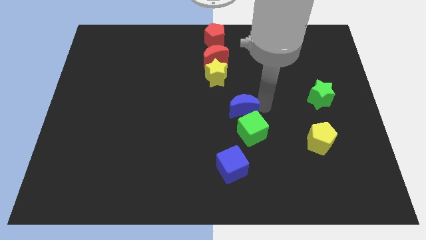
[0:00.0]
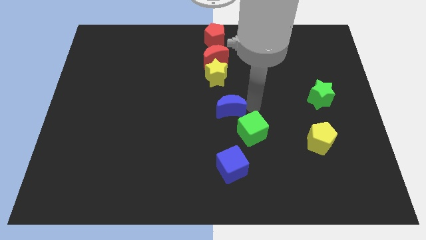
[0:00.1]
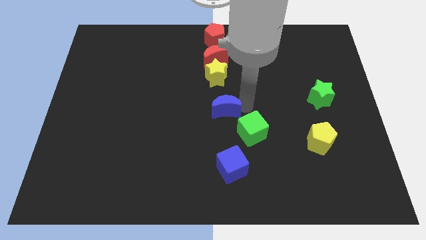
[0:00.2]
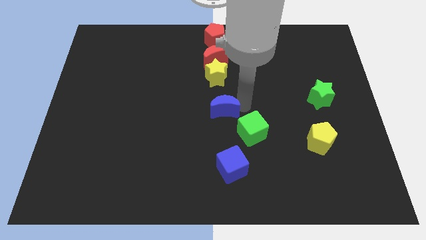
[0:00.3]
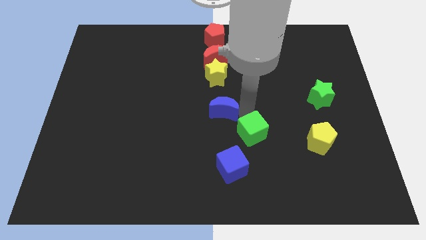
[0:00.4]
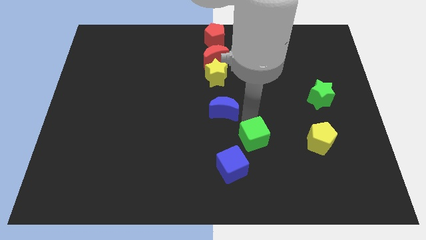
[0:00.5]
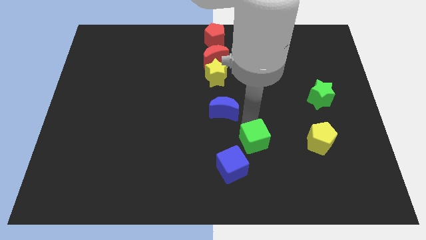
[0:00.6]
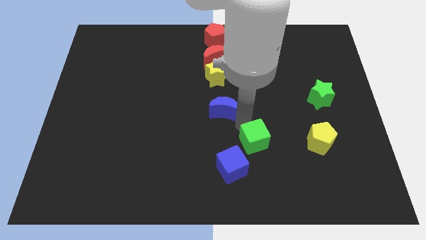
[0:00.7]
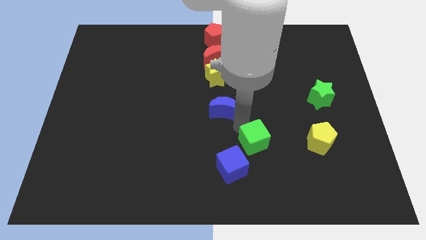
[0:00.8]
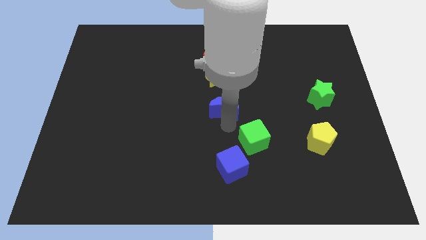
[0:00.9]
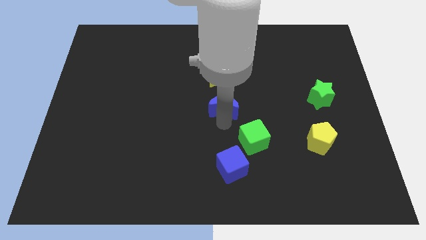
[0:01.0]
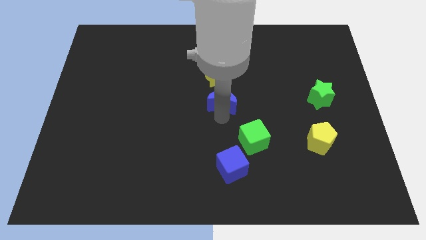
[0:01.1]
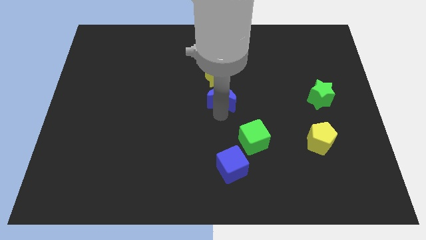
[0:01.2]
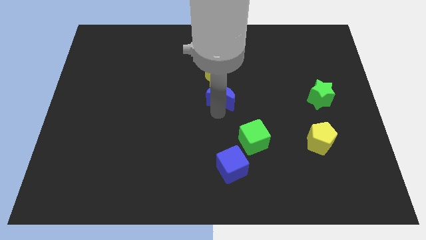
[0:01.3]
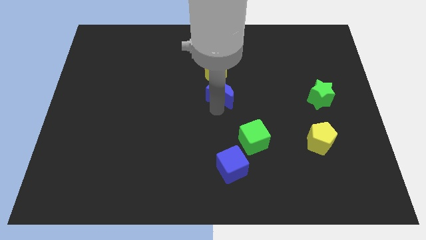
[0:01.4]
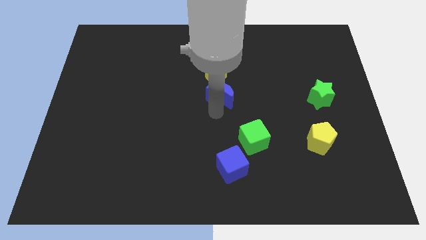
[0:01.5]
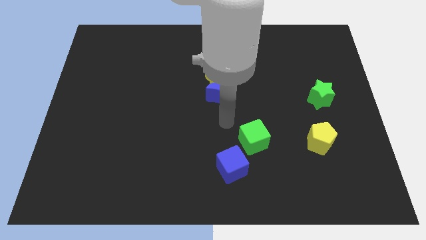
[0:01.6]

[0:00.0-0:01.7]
place the blue crescent below the yellow star

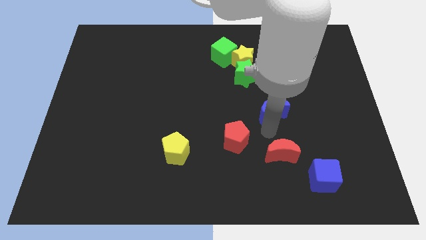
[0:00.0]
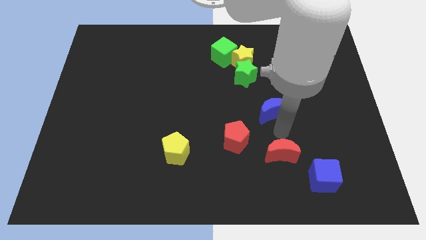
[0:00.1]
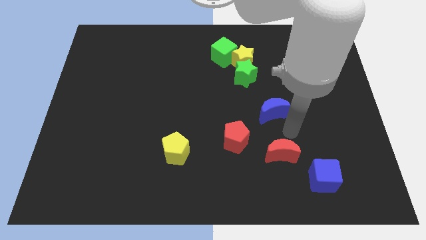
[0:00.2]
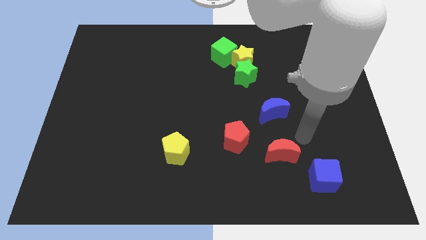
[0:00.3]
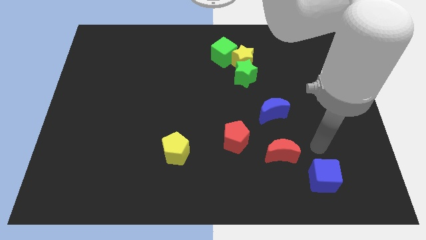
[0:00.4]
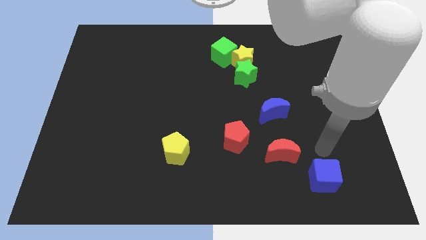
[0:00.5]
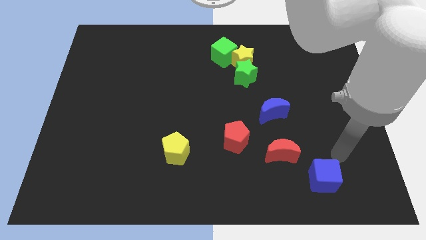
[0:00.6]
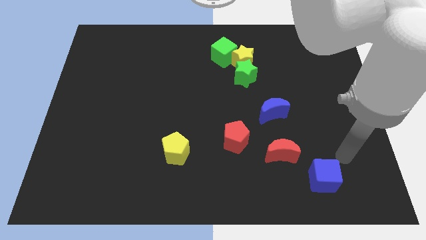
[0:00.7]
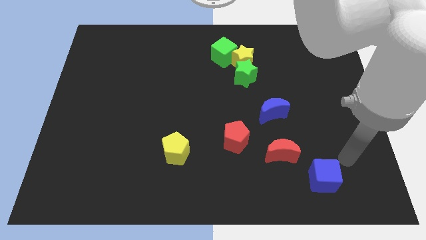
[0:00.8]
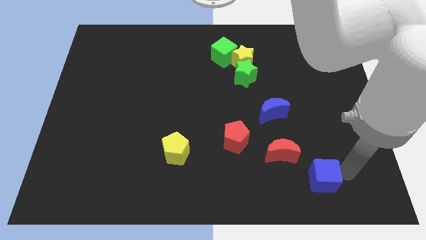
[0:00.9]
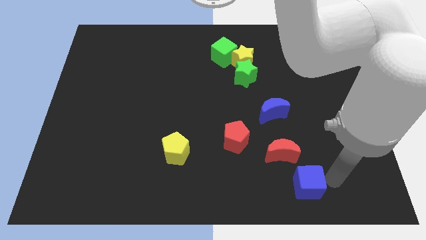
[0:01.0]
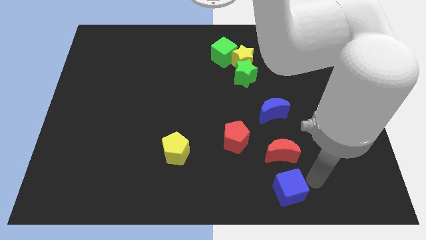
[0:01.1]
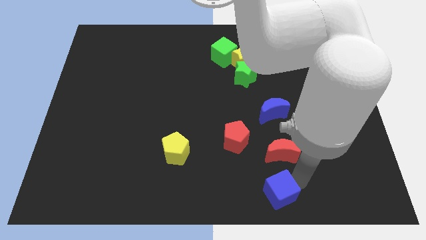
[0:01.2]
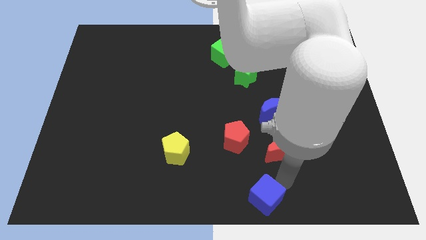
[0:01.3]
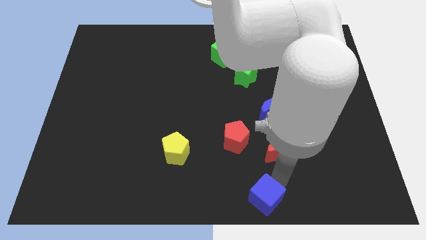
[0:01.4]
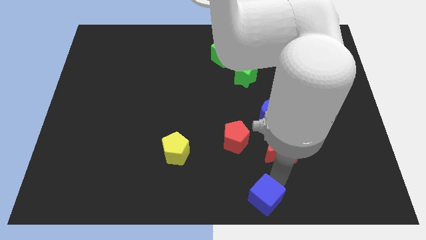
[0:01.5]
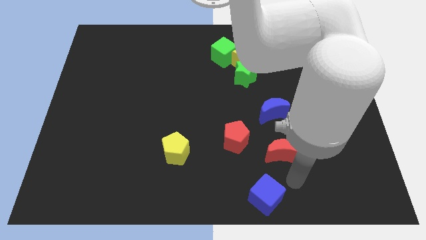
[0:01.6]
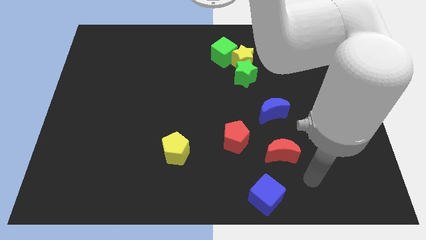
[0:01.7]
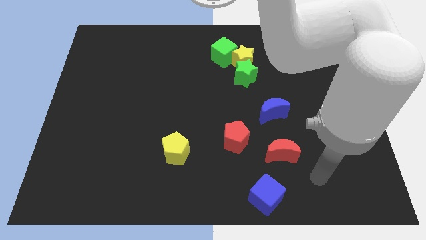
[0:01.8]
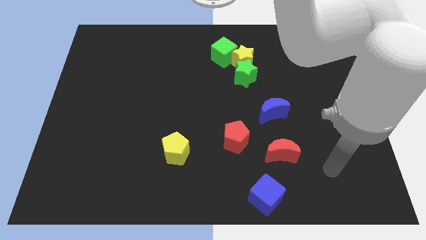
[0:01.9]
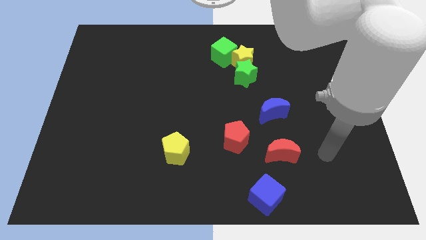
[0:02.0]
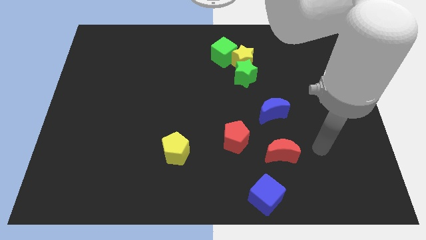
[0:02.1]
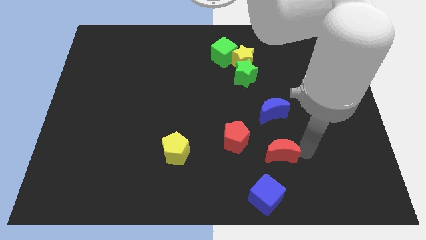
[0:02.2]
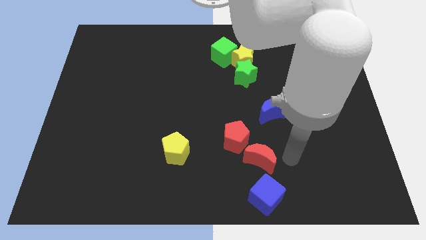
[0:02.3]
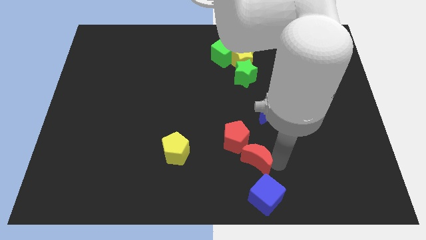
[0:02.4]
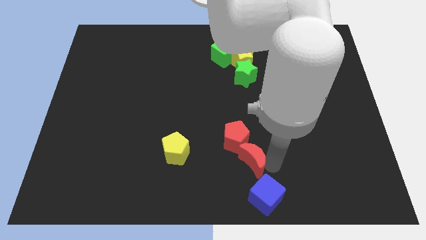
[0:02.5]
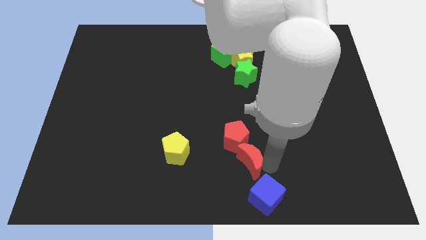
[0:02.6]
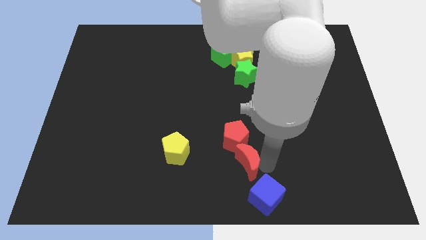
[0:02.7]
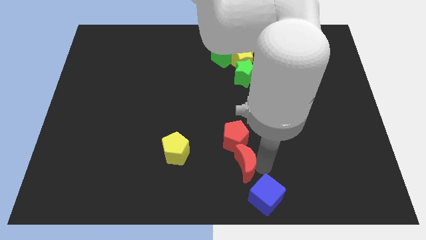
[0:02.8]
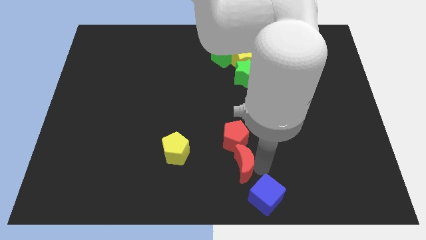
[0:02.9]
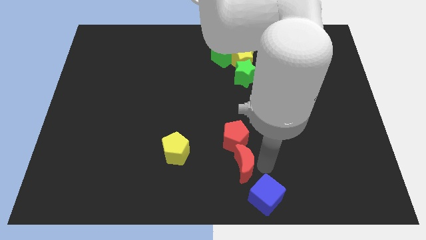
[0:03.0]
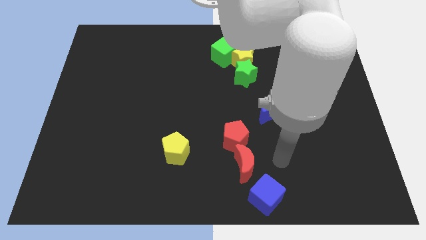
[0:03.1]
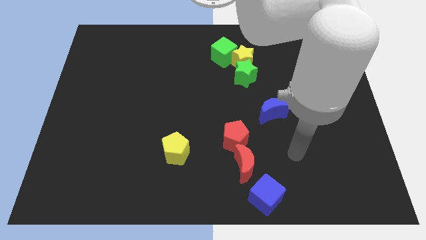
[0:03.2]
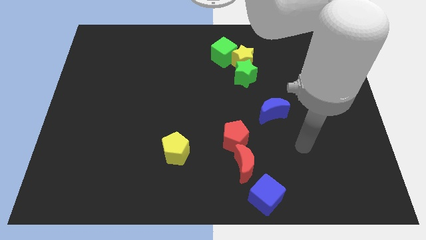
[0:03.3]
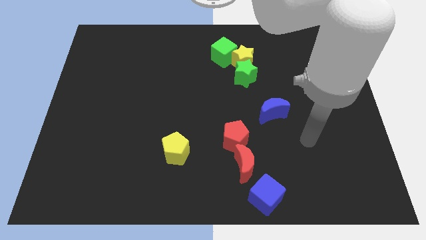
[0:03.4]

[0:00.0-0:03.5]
place the red crescent and the blue cube in a vertical line with the red pentagon

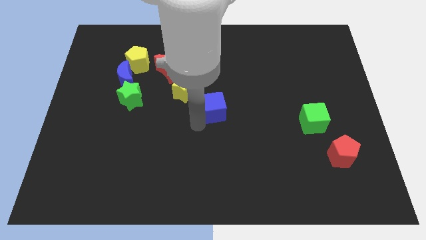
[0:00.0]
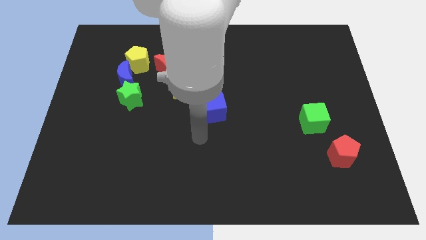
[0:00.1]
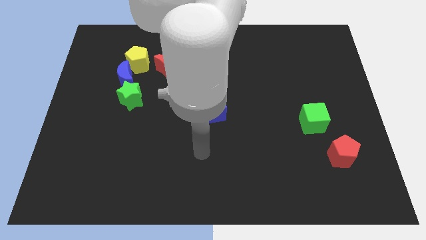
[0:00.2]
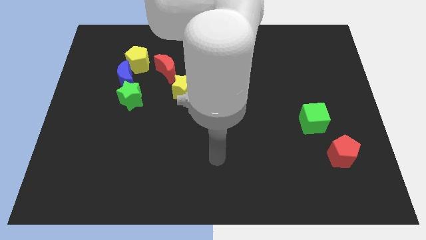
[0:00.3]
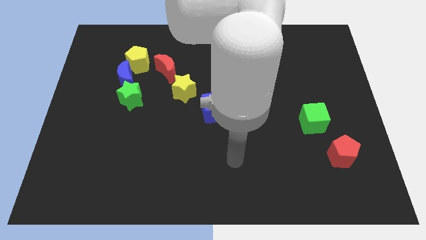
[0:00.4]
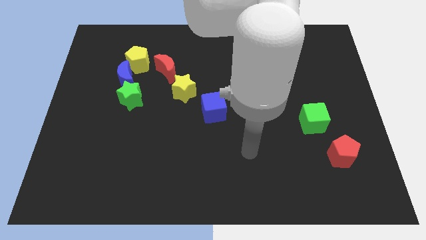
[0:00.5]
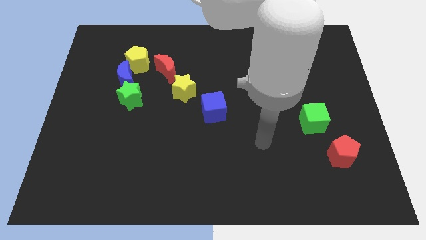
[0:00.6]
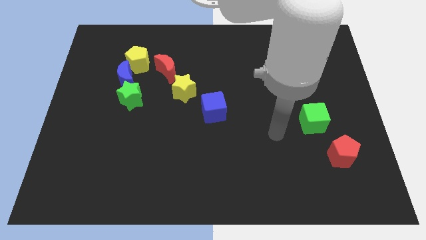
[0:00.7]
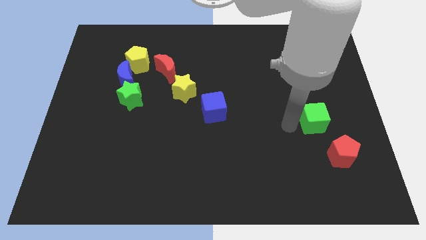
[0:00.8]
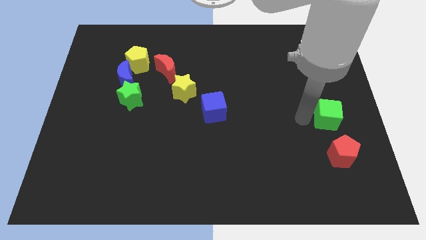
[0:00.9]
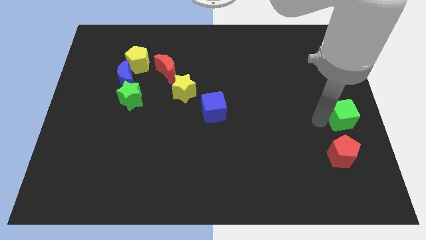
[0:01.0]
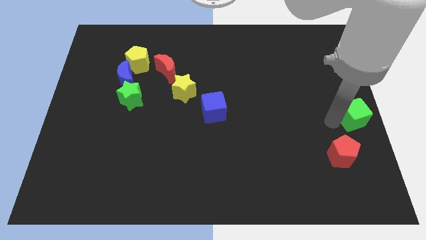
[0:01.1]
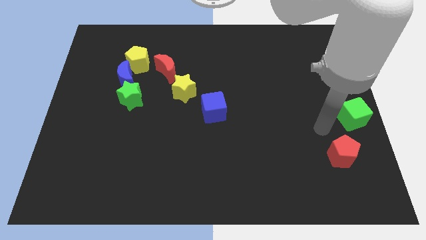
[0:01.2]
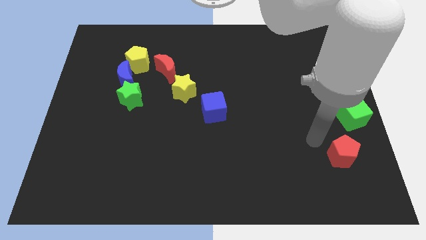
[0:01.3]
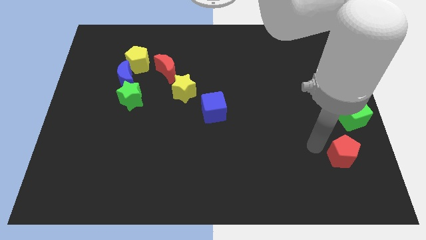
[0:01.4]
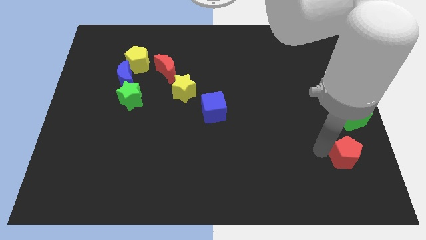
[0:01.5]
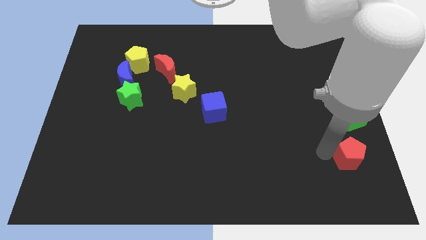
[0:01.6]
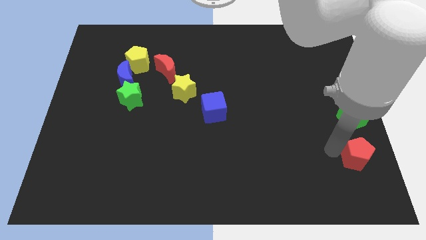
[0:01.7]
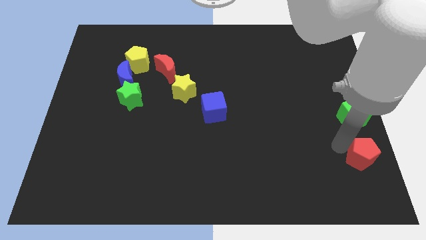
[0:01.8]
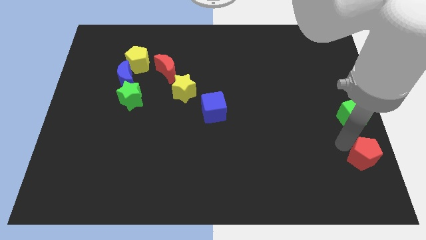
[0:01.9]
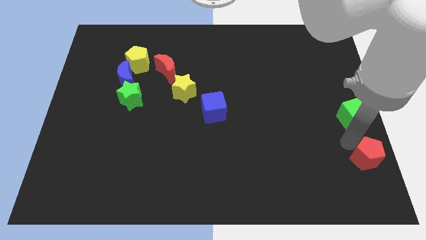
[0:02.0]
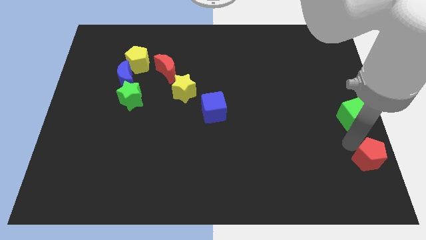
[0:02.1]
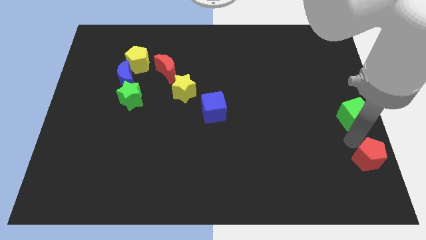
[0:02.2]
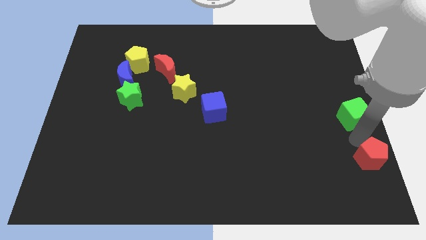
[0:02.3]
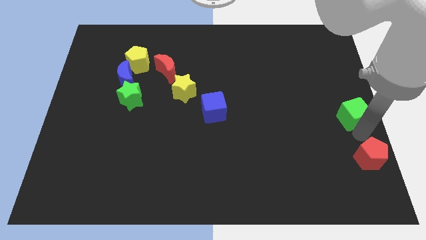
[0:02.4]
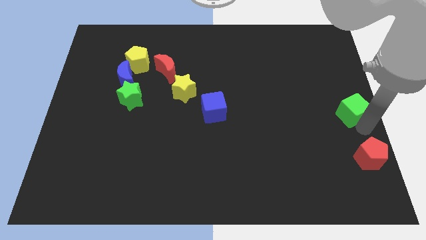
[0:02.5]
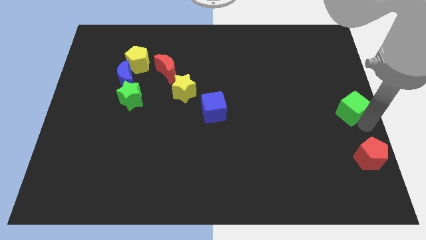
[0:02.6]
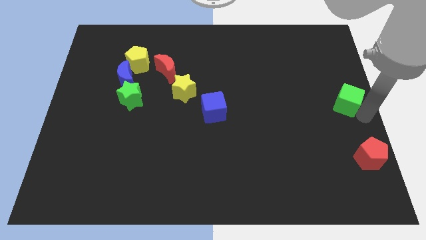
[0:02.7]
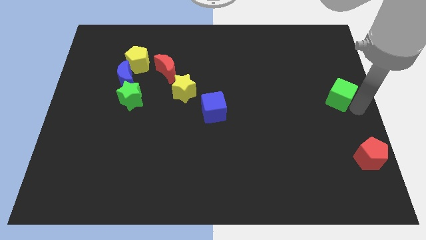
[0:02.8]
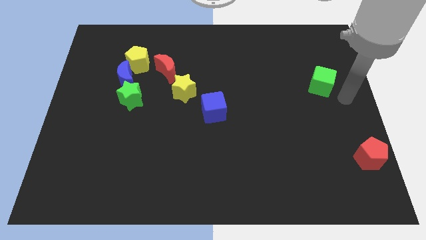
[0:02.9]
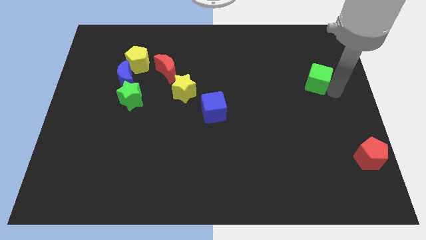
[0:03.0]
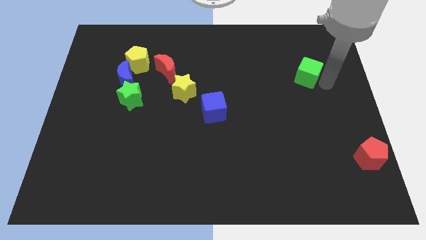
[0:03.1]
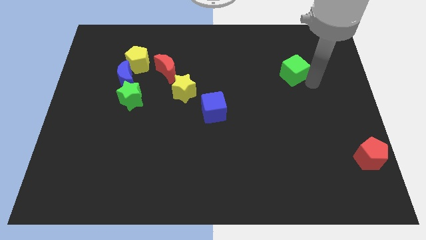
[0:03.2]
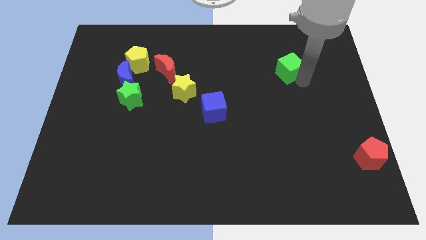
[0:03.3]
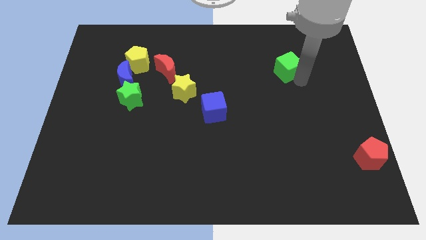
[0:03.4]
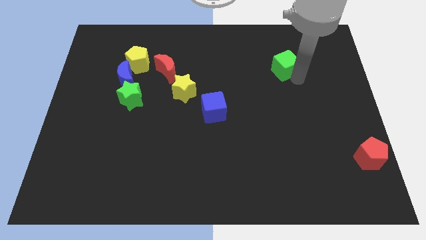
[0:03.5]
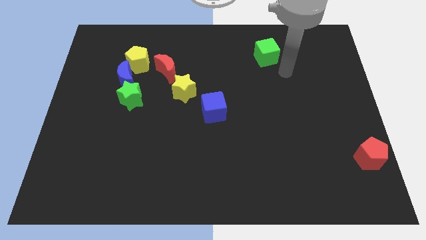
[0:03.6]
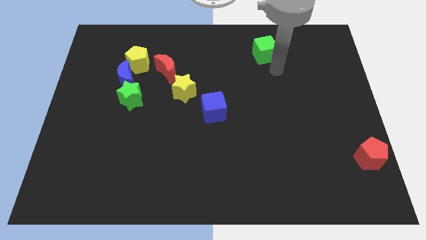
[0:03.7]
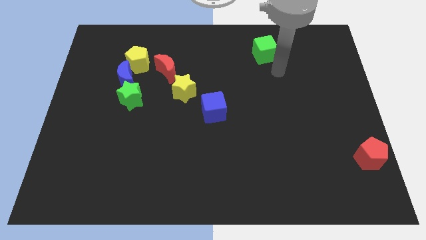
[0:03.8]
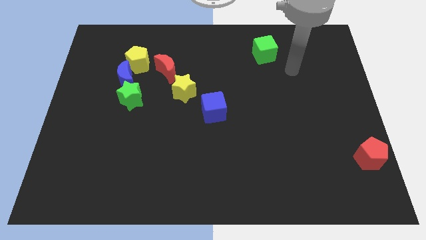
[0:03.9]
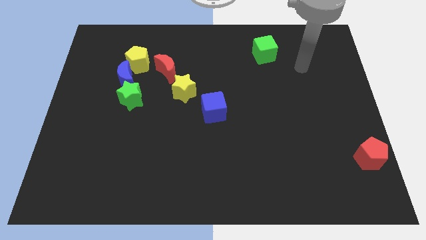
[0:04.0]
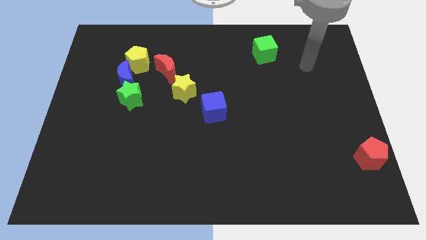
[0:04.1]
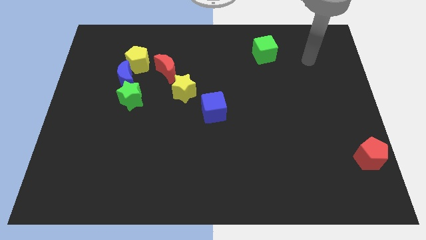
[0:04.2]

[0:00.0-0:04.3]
put the green cube to the top right of the blue cube
